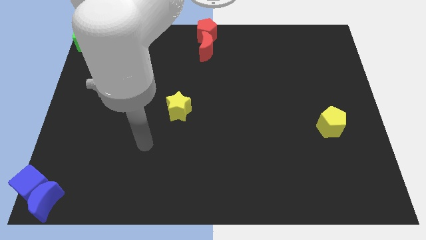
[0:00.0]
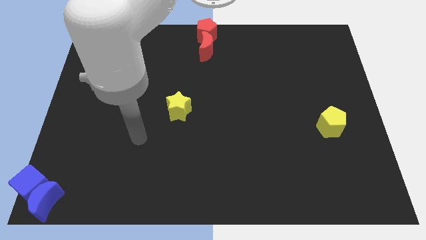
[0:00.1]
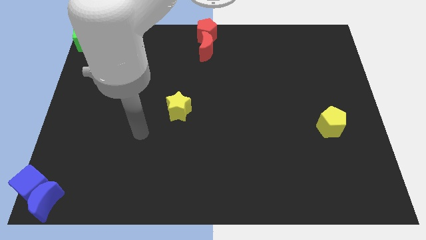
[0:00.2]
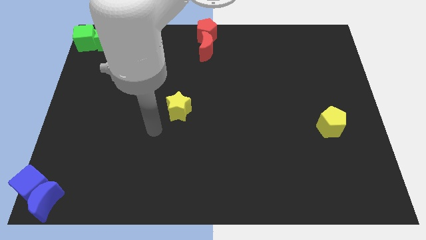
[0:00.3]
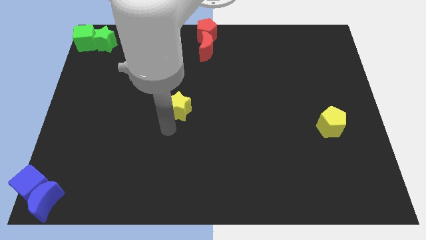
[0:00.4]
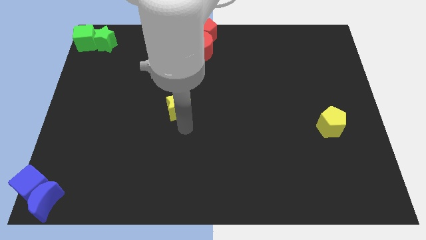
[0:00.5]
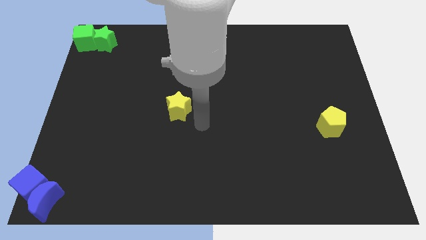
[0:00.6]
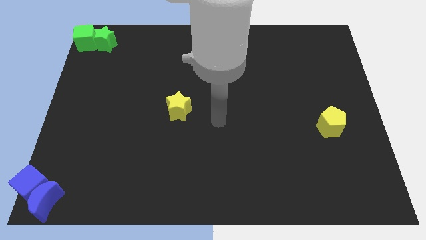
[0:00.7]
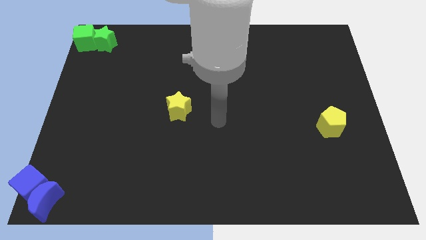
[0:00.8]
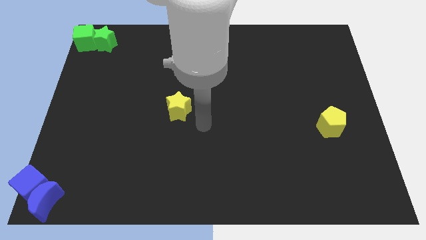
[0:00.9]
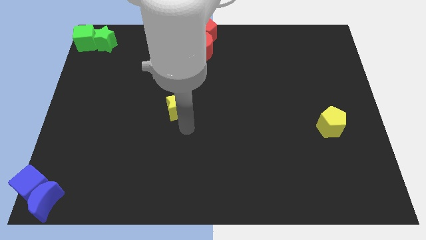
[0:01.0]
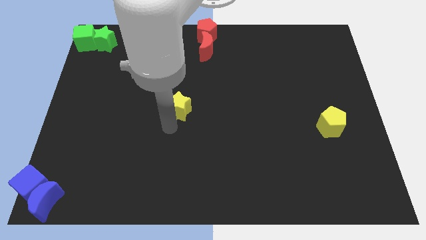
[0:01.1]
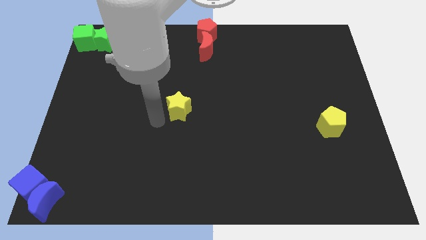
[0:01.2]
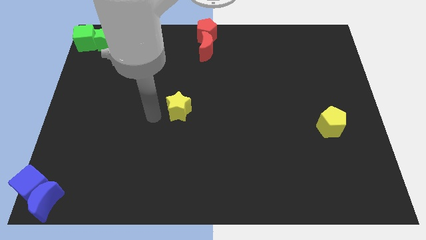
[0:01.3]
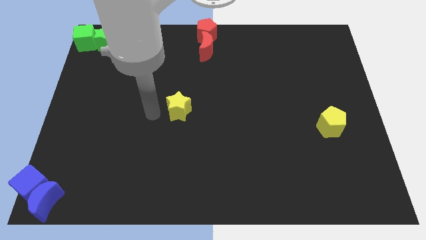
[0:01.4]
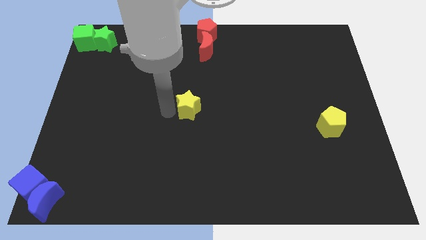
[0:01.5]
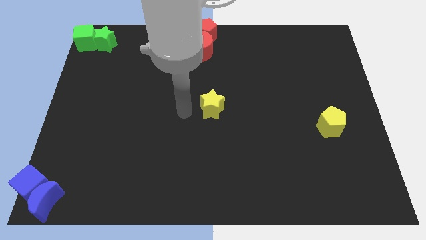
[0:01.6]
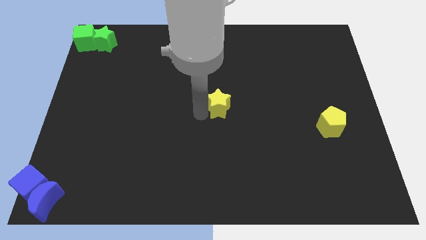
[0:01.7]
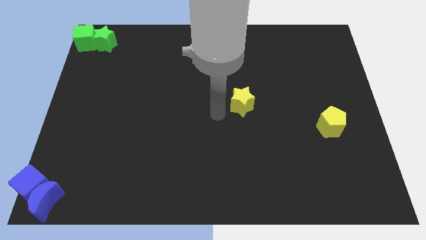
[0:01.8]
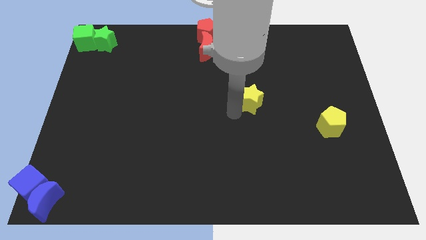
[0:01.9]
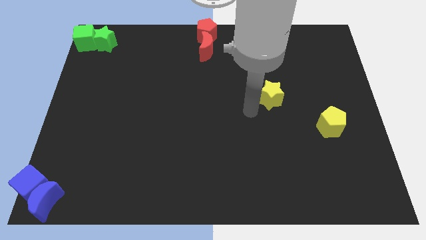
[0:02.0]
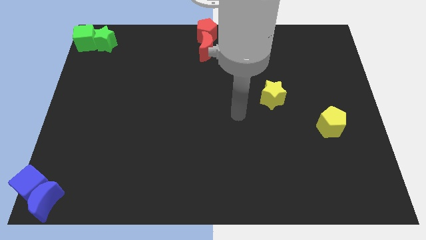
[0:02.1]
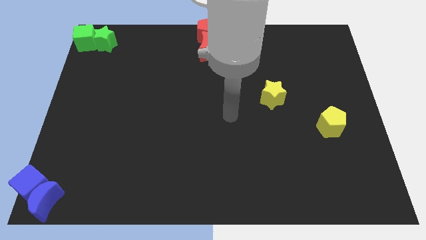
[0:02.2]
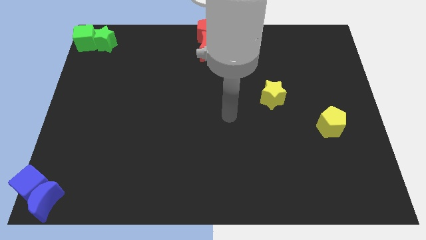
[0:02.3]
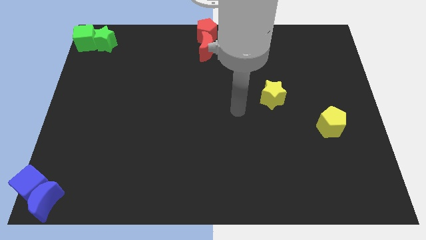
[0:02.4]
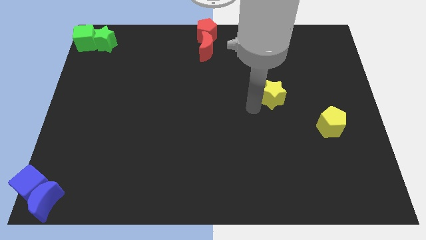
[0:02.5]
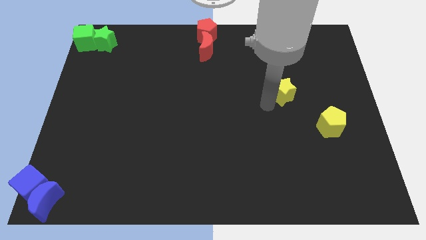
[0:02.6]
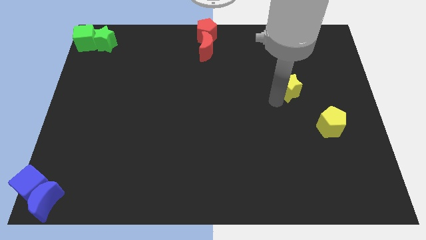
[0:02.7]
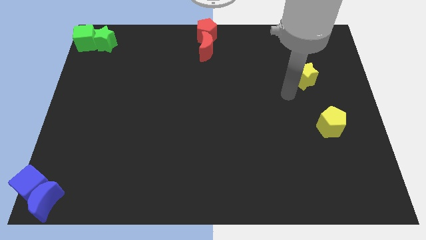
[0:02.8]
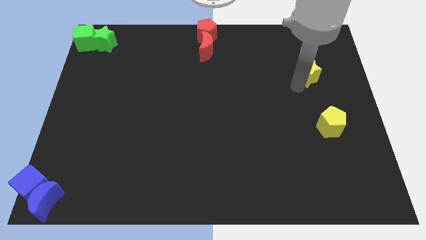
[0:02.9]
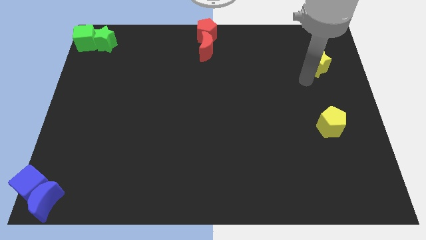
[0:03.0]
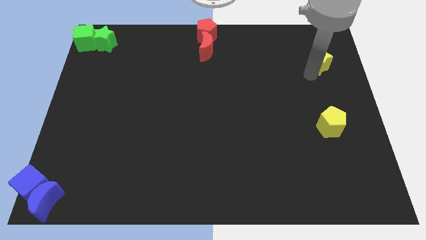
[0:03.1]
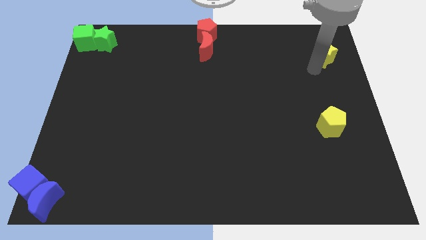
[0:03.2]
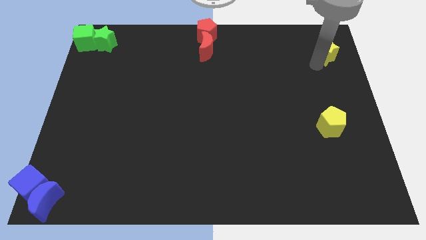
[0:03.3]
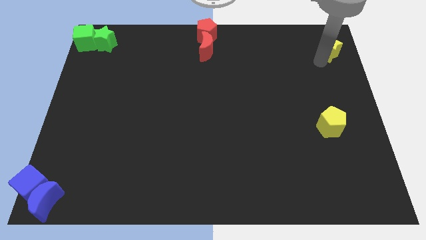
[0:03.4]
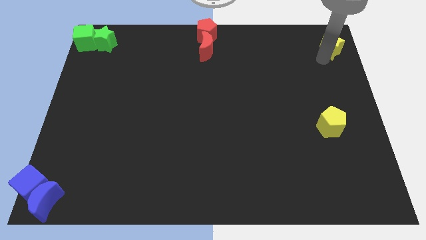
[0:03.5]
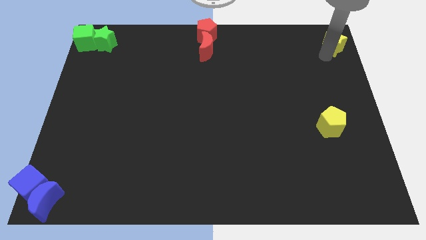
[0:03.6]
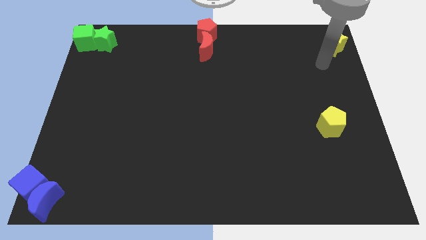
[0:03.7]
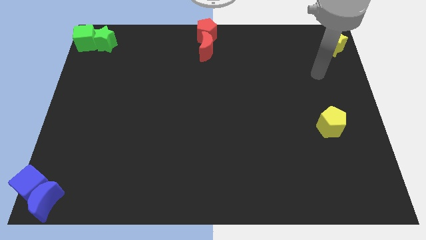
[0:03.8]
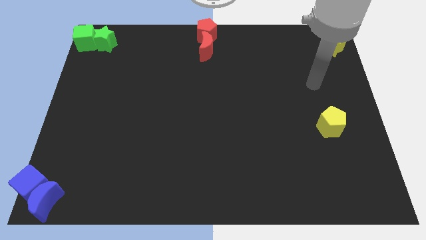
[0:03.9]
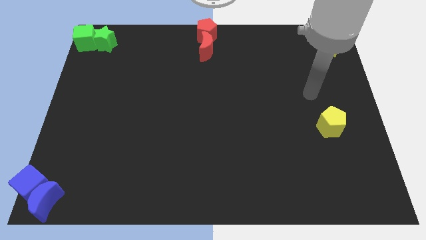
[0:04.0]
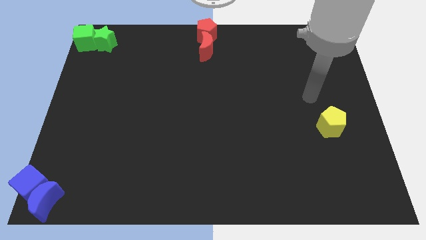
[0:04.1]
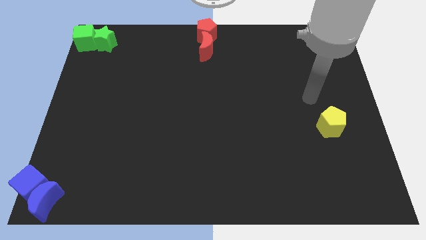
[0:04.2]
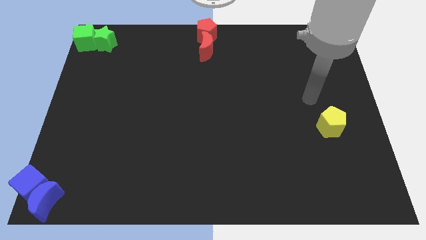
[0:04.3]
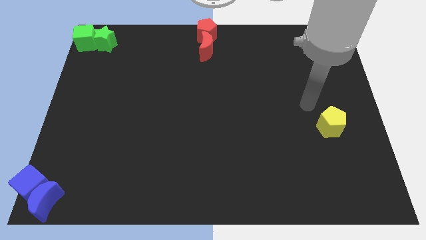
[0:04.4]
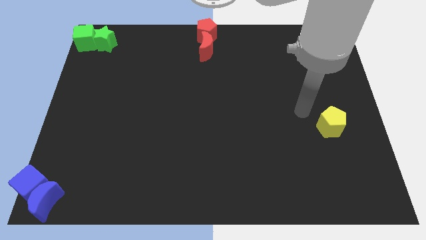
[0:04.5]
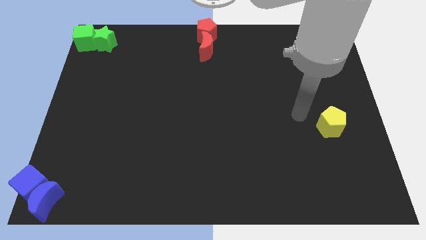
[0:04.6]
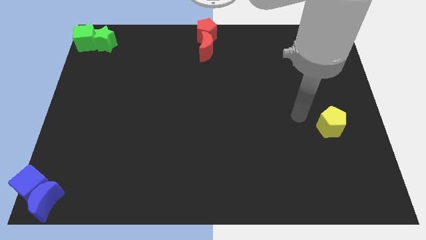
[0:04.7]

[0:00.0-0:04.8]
push the yellow star towards the top right corner of the board

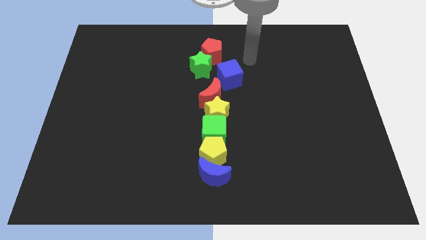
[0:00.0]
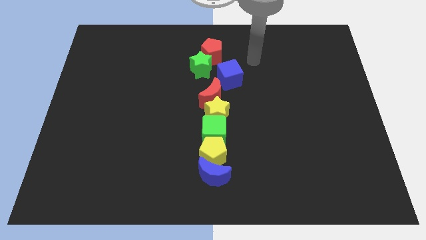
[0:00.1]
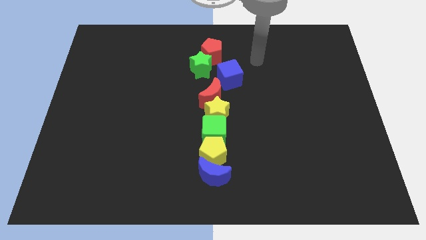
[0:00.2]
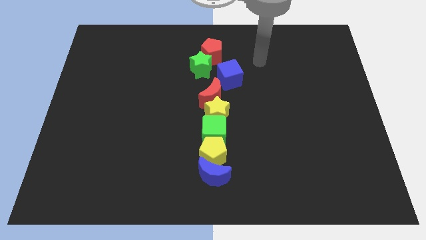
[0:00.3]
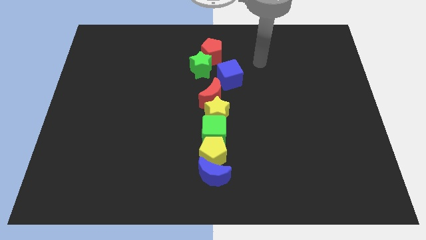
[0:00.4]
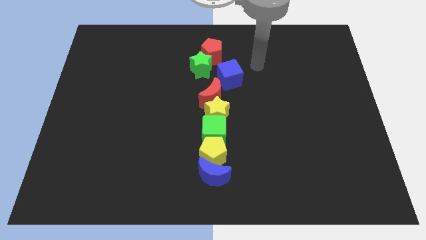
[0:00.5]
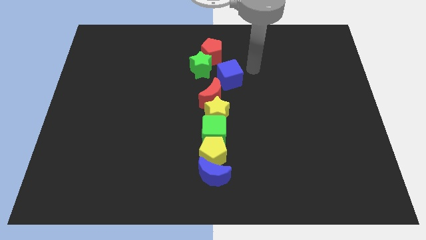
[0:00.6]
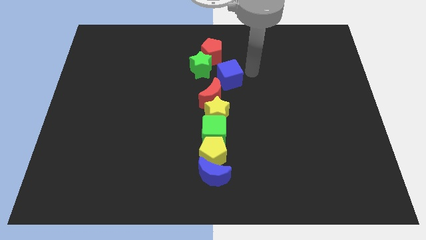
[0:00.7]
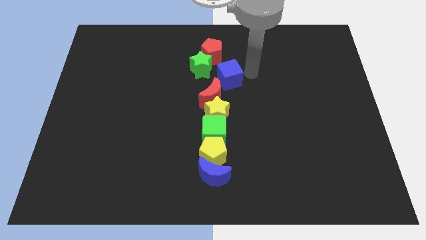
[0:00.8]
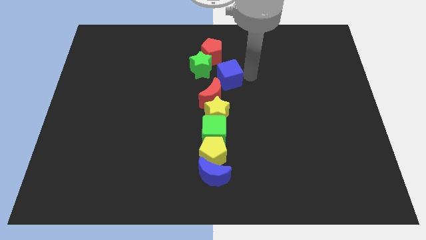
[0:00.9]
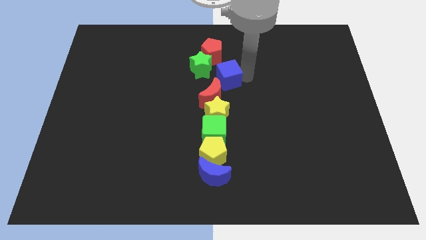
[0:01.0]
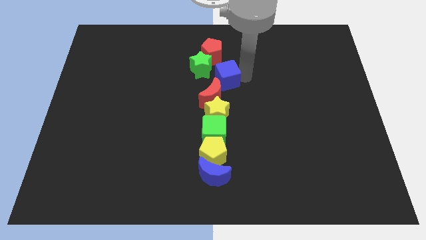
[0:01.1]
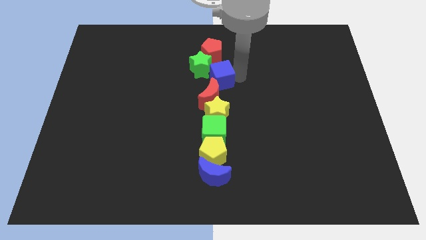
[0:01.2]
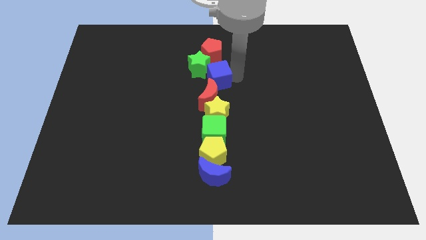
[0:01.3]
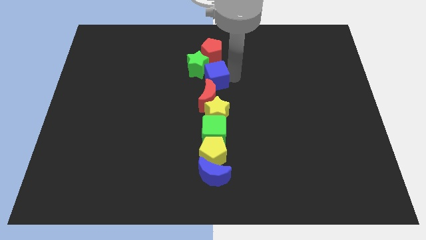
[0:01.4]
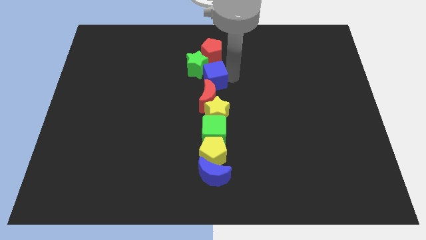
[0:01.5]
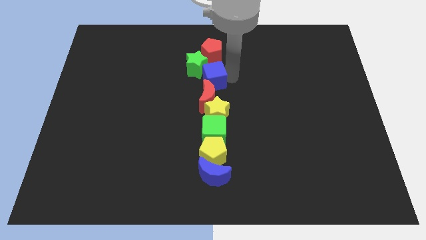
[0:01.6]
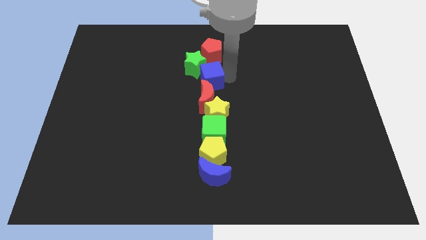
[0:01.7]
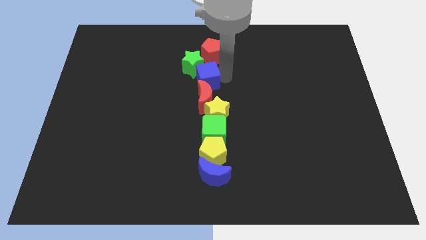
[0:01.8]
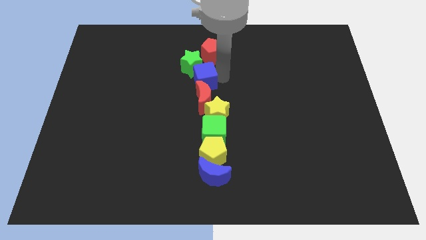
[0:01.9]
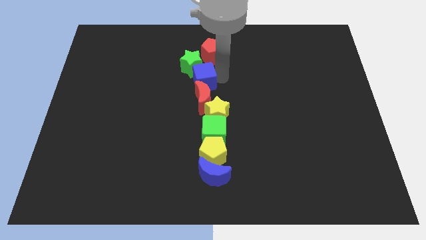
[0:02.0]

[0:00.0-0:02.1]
move the blue cube slightly to the left

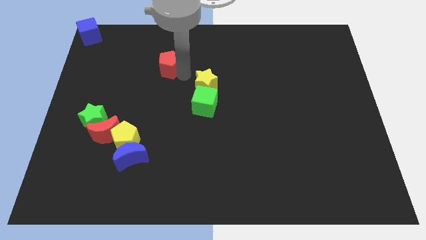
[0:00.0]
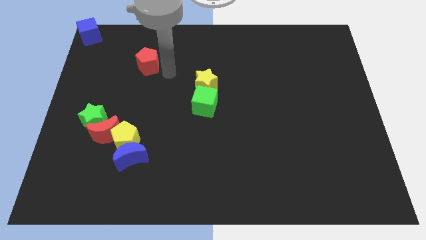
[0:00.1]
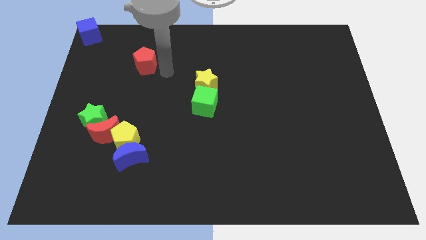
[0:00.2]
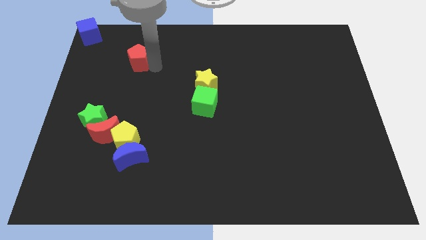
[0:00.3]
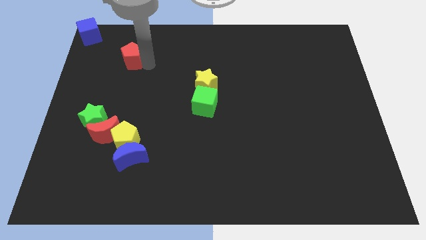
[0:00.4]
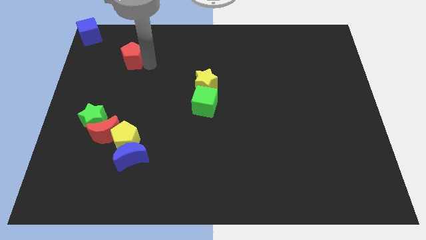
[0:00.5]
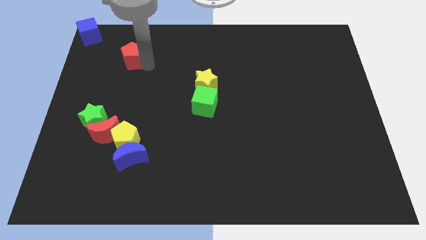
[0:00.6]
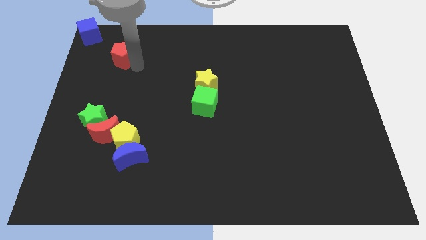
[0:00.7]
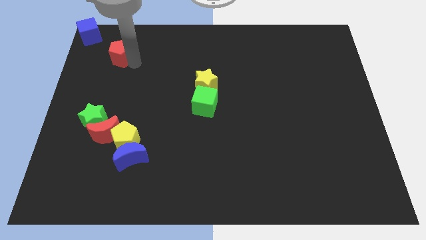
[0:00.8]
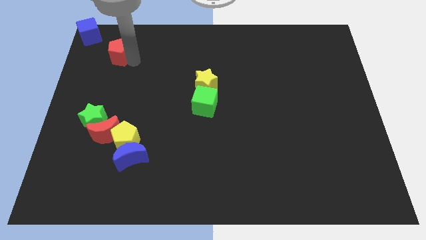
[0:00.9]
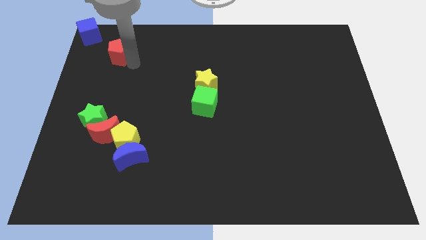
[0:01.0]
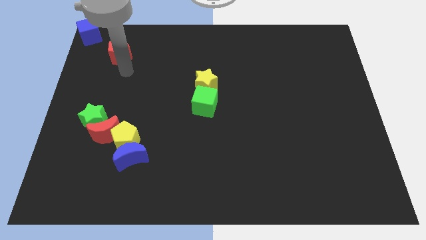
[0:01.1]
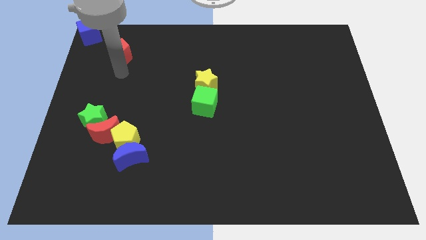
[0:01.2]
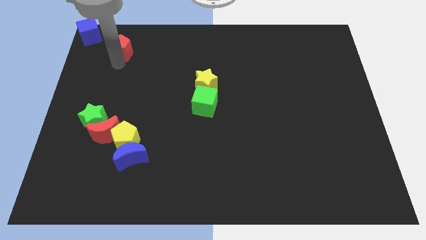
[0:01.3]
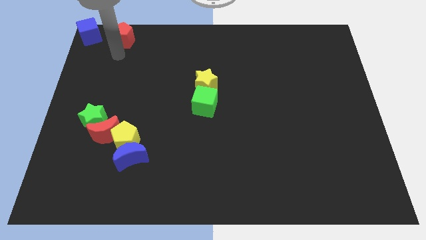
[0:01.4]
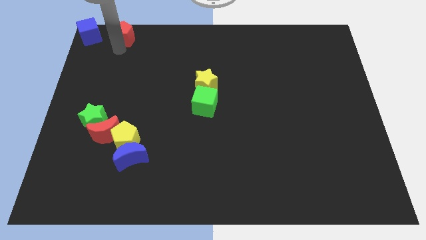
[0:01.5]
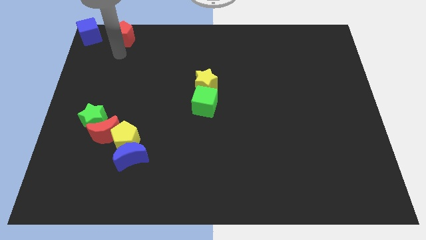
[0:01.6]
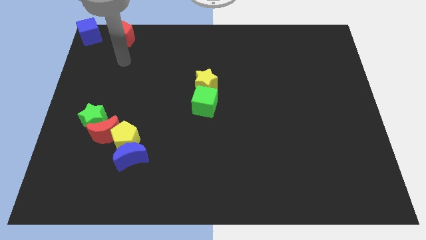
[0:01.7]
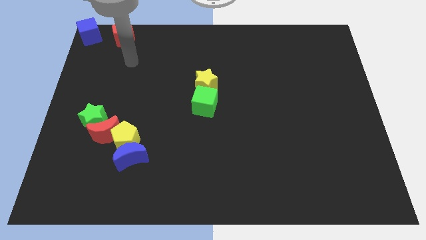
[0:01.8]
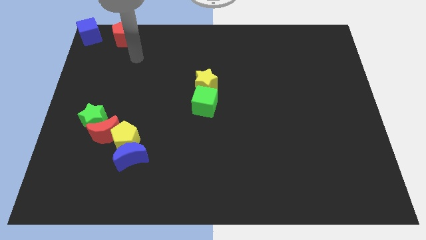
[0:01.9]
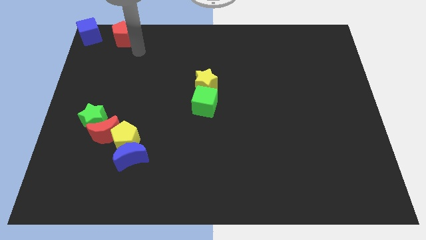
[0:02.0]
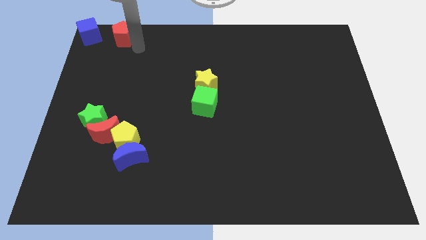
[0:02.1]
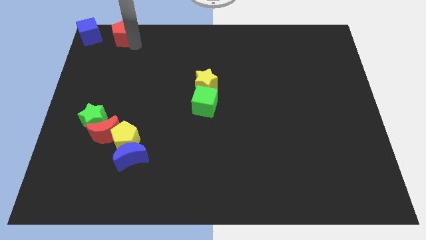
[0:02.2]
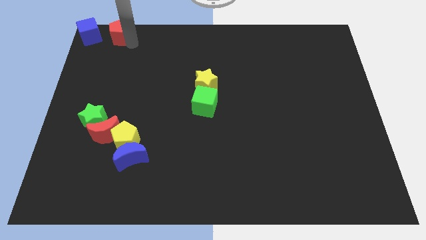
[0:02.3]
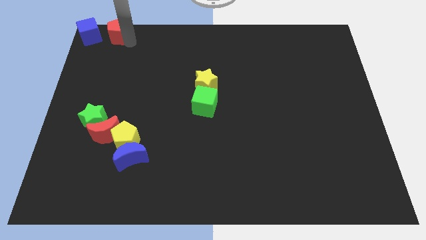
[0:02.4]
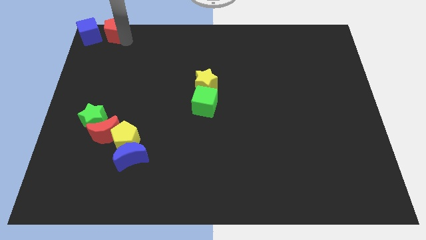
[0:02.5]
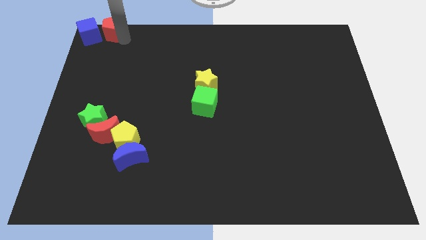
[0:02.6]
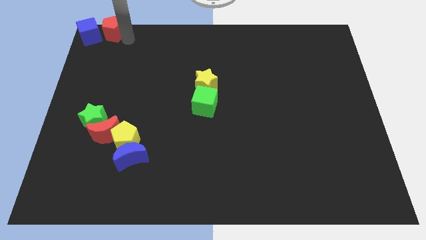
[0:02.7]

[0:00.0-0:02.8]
place the red pentagon to the right of the blue cube
